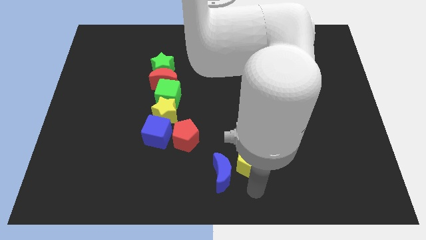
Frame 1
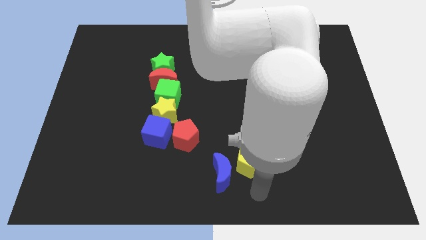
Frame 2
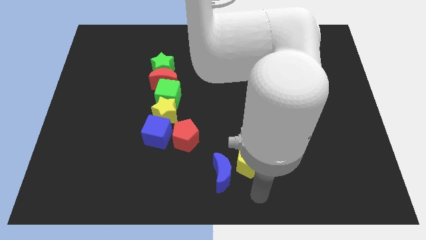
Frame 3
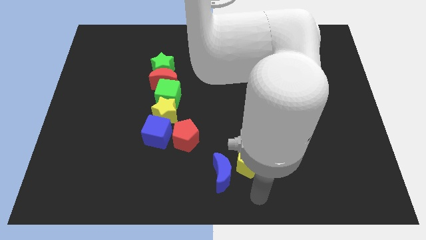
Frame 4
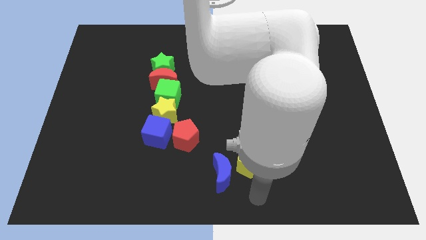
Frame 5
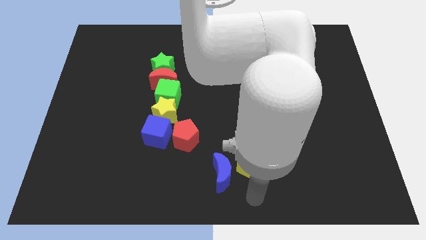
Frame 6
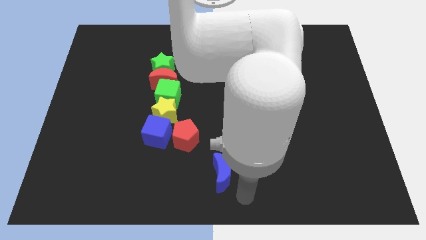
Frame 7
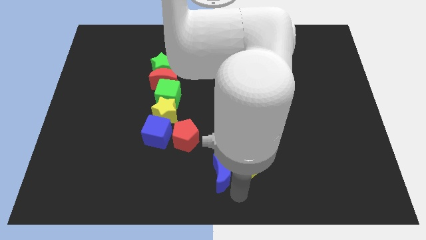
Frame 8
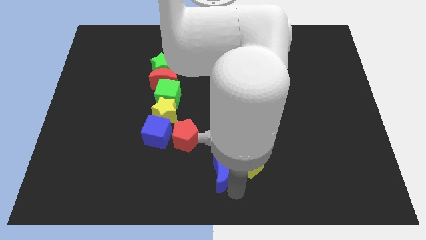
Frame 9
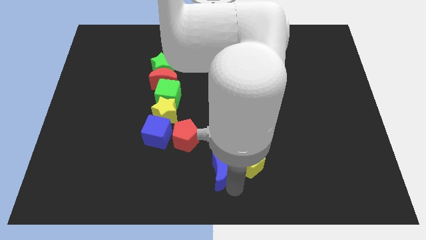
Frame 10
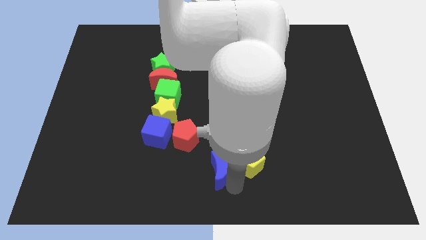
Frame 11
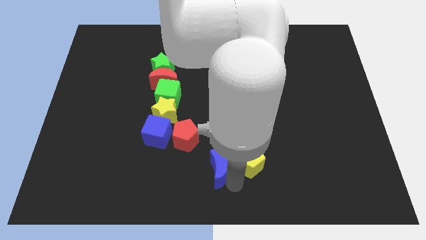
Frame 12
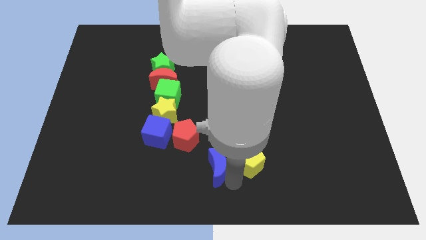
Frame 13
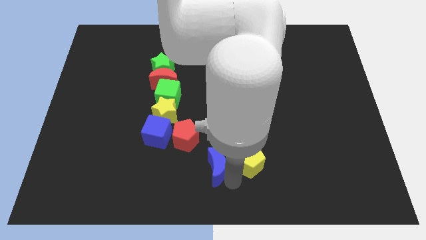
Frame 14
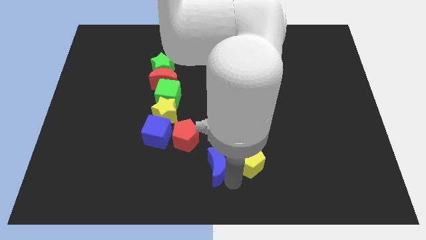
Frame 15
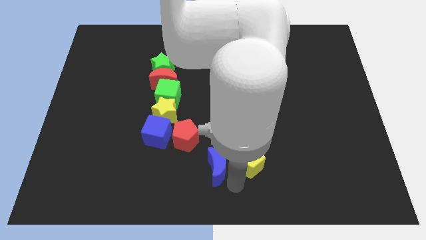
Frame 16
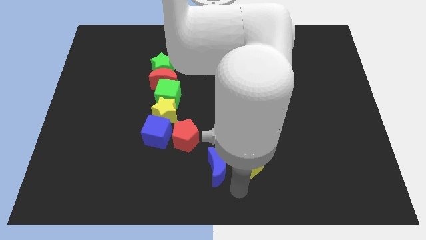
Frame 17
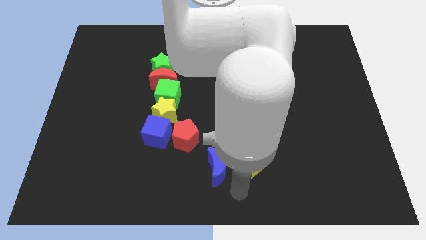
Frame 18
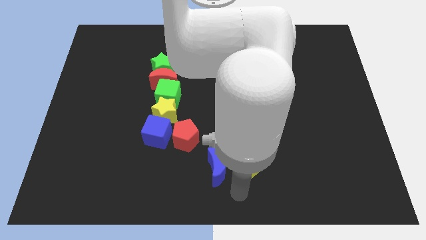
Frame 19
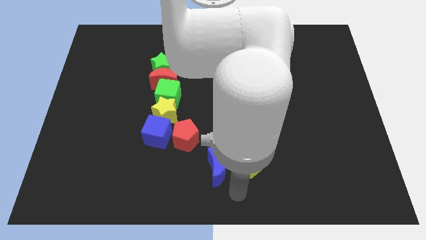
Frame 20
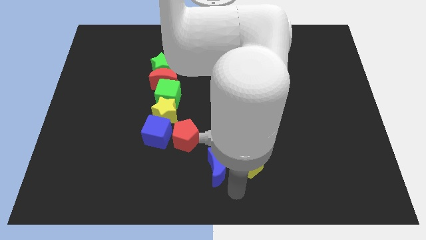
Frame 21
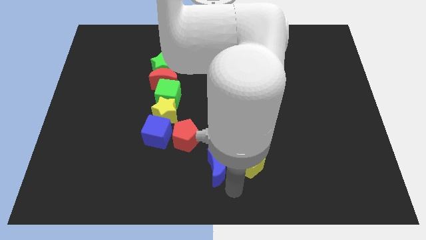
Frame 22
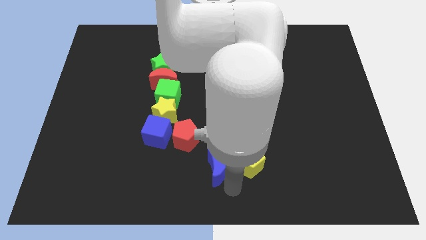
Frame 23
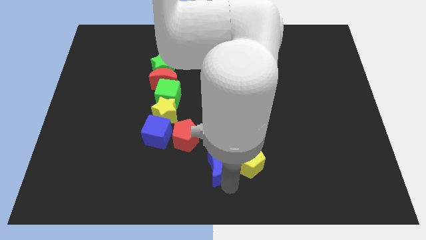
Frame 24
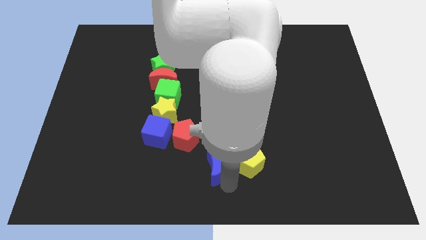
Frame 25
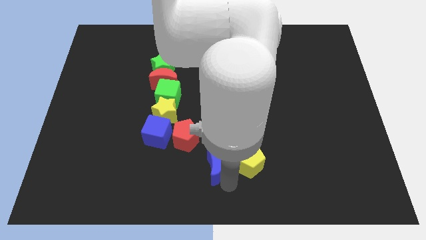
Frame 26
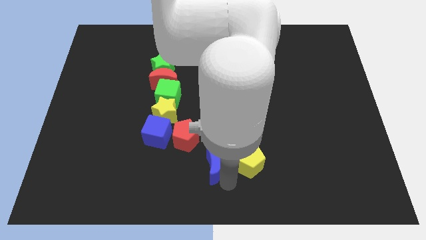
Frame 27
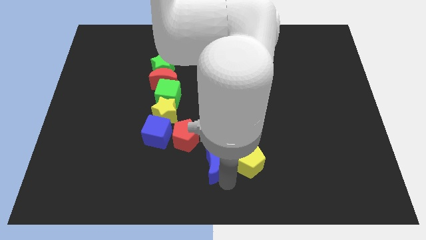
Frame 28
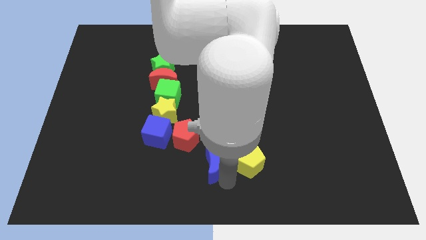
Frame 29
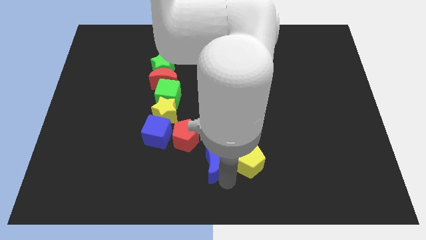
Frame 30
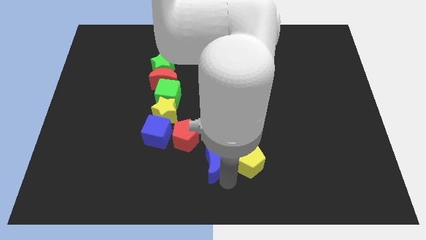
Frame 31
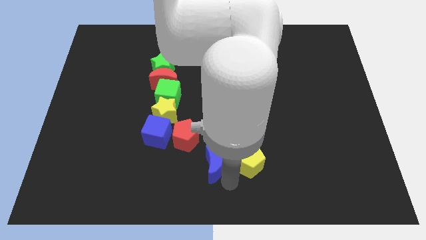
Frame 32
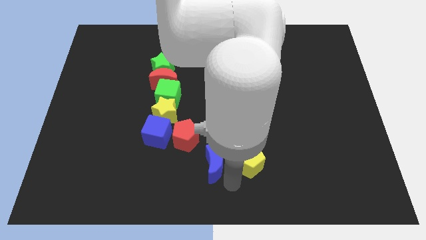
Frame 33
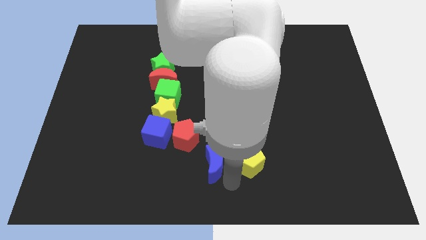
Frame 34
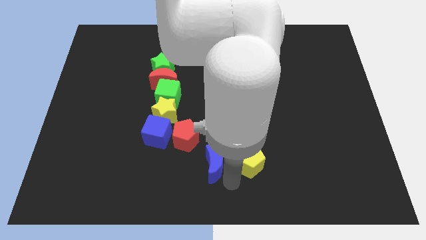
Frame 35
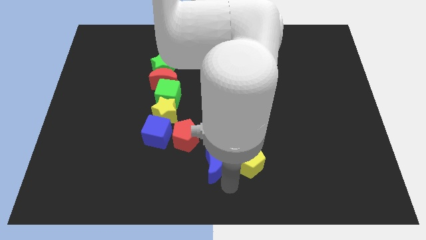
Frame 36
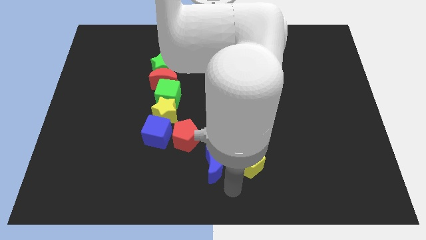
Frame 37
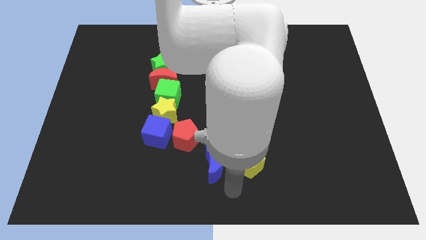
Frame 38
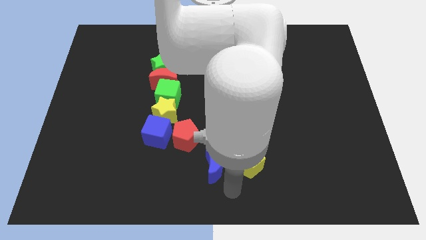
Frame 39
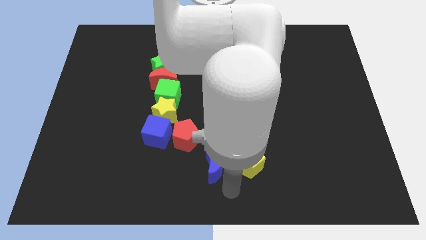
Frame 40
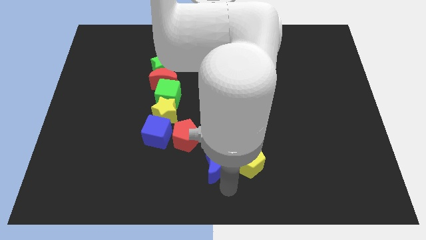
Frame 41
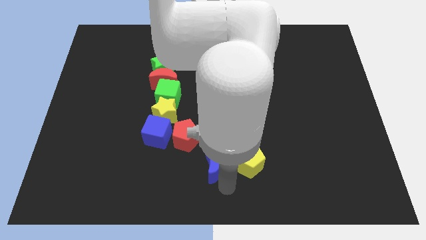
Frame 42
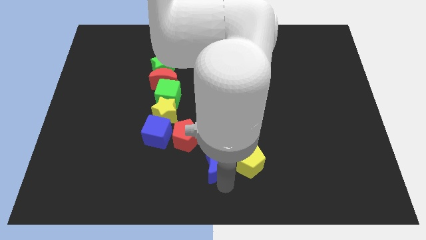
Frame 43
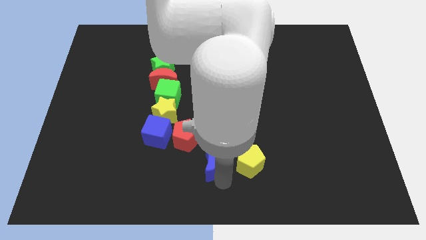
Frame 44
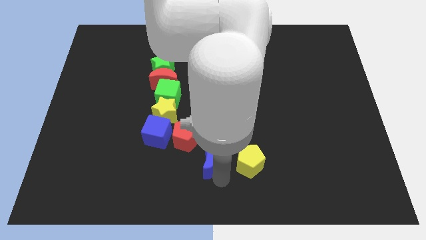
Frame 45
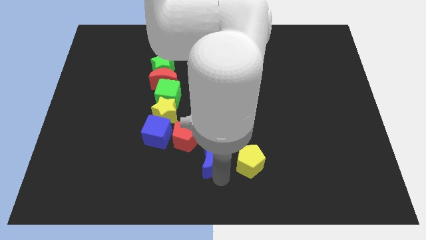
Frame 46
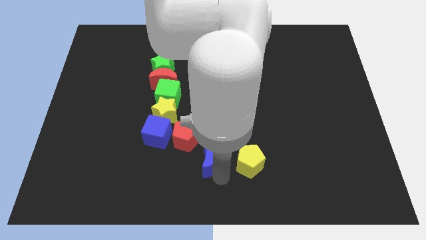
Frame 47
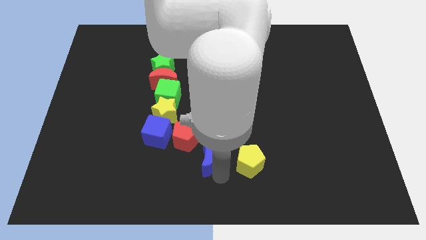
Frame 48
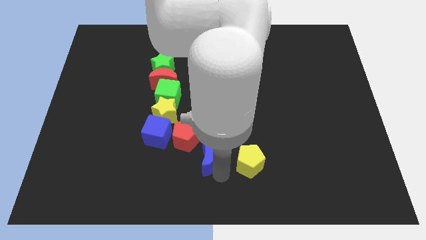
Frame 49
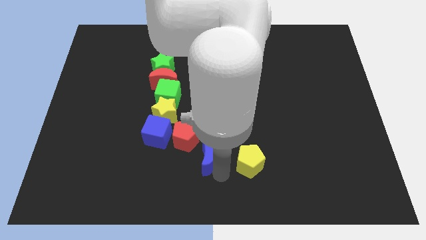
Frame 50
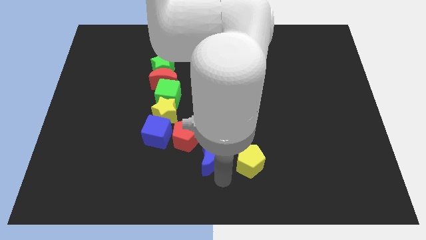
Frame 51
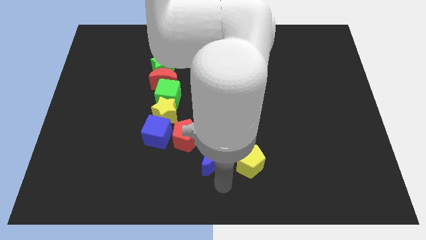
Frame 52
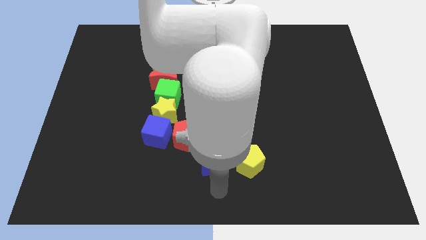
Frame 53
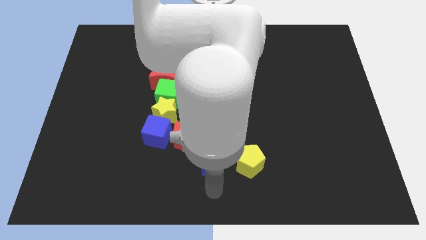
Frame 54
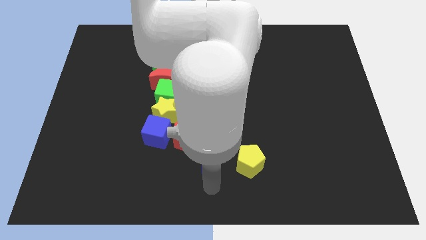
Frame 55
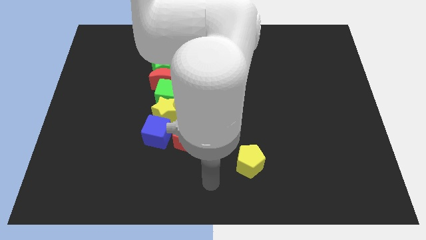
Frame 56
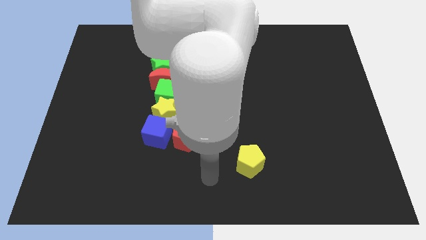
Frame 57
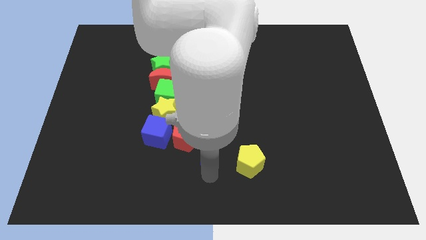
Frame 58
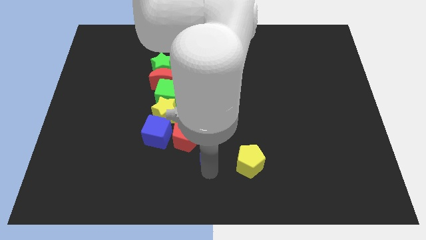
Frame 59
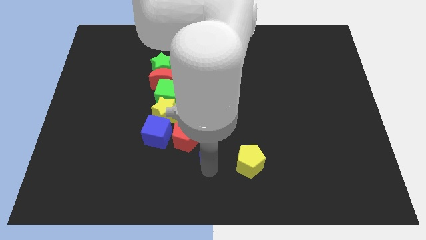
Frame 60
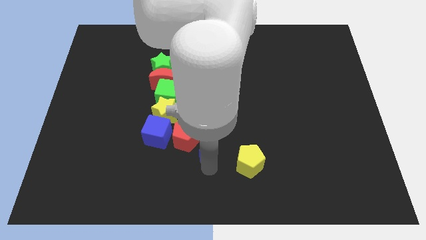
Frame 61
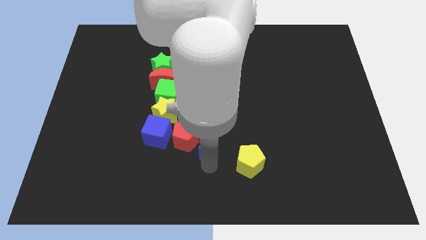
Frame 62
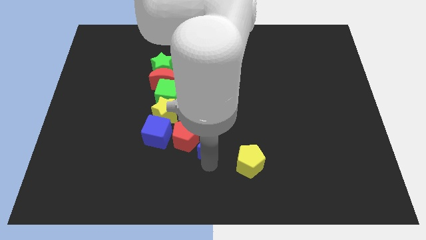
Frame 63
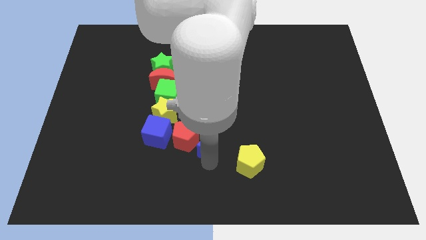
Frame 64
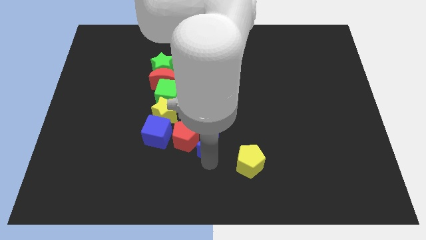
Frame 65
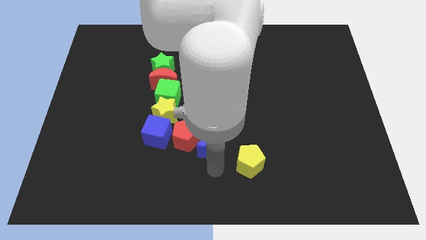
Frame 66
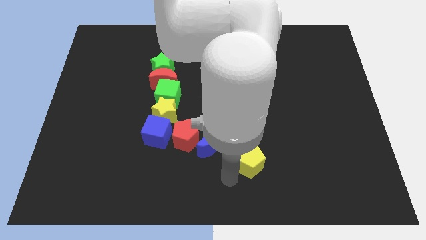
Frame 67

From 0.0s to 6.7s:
push the blue crescent into the red pentagon

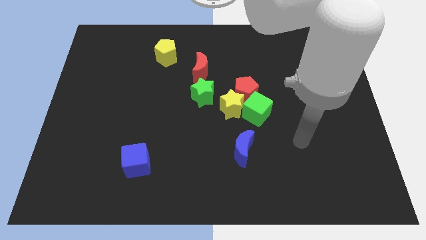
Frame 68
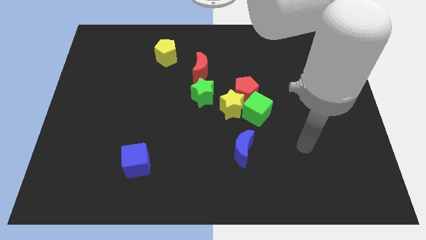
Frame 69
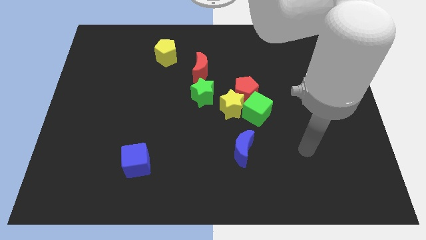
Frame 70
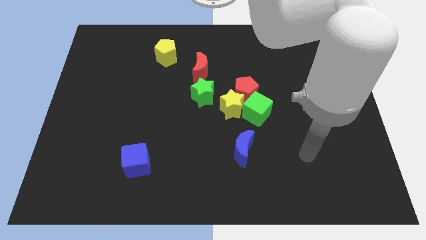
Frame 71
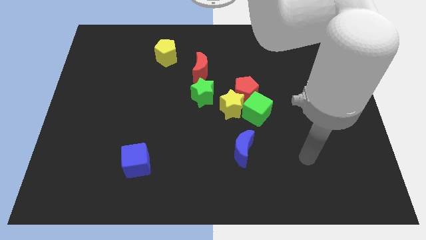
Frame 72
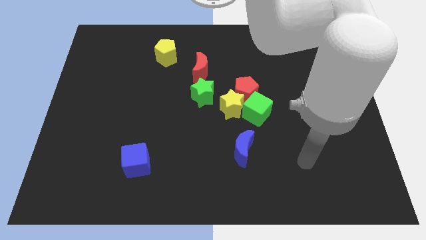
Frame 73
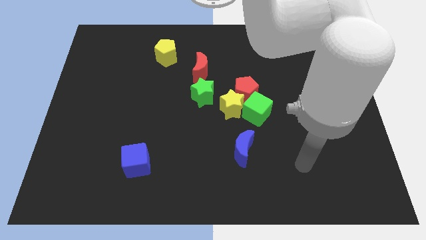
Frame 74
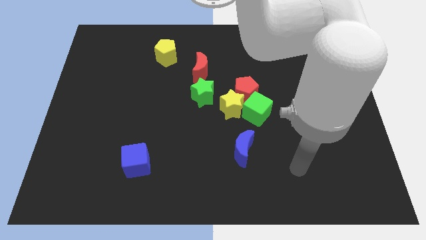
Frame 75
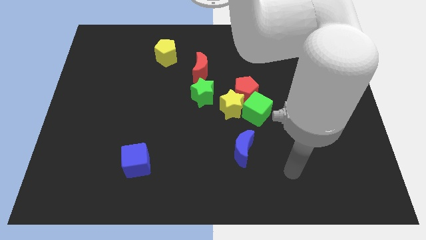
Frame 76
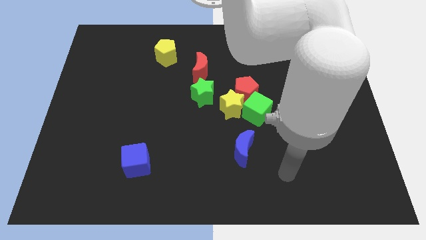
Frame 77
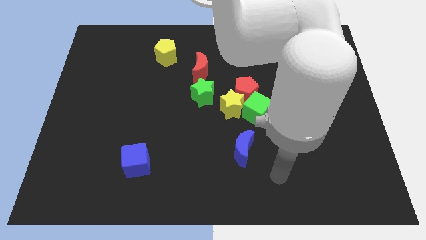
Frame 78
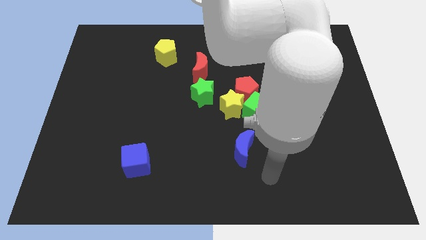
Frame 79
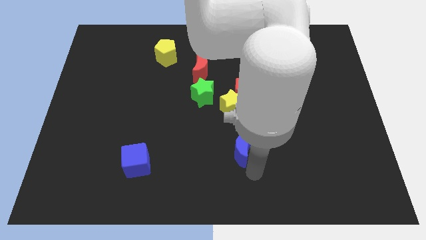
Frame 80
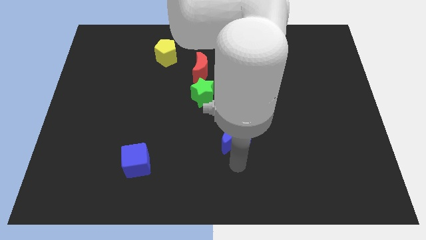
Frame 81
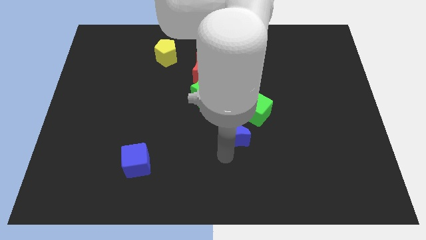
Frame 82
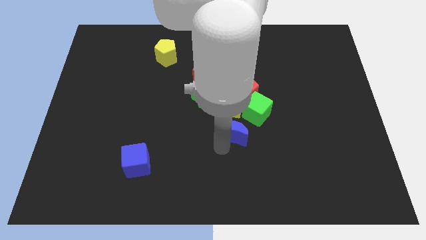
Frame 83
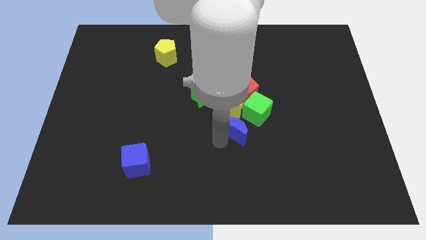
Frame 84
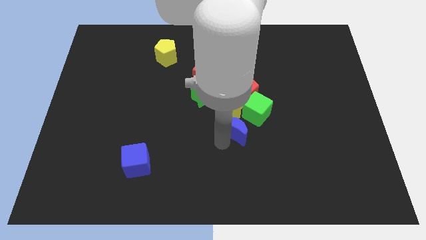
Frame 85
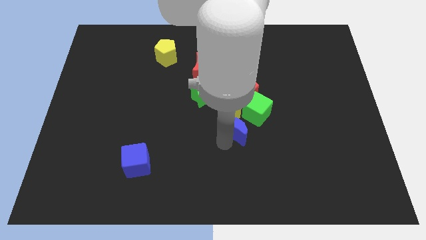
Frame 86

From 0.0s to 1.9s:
push the blue moon close to the green cube and yellow star

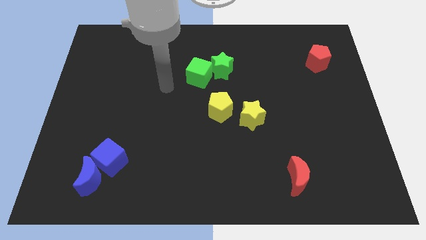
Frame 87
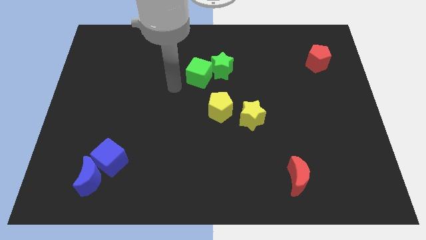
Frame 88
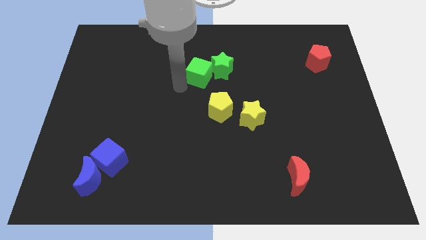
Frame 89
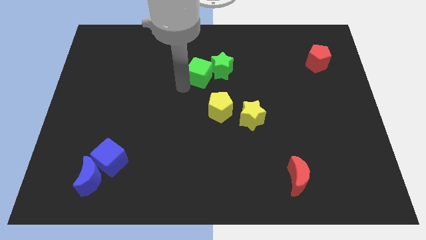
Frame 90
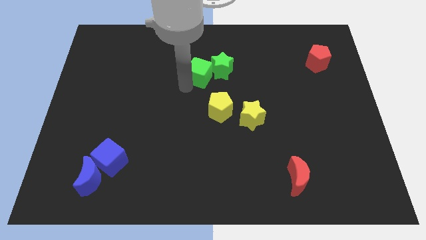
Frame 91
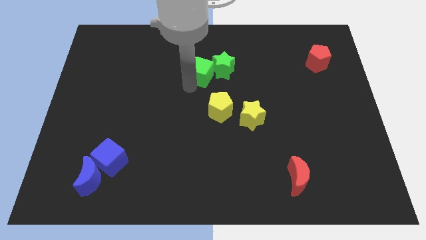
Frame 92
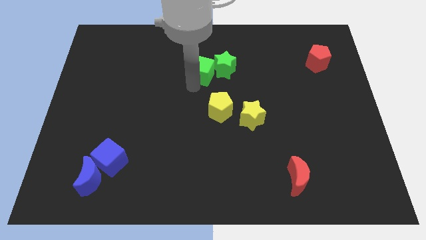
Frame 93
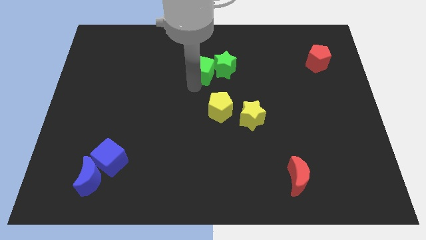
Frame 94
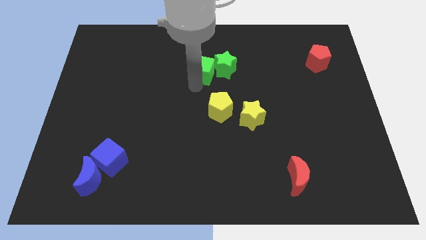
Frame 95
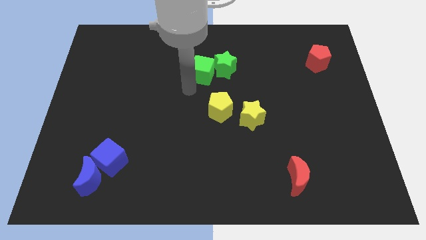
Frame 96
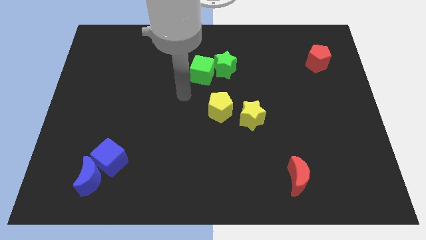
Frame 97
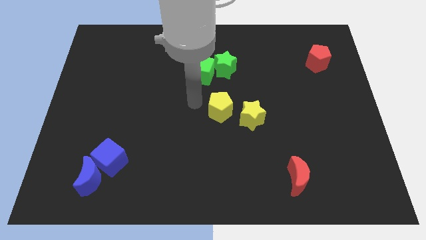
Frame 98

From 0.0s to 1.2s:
push the green blocks towards the right side
